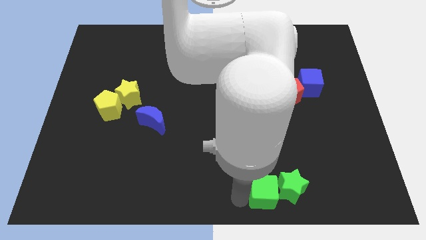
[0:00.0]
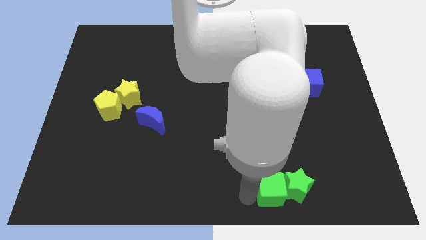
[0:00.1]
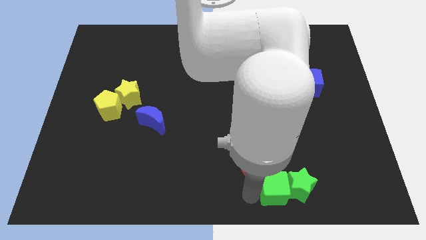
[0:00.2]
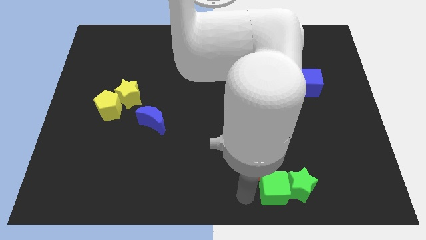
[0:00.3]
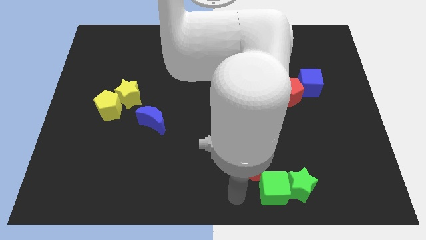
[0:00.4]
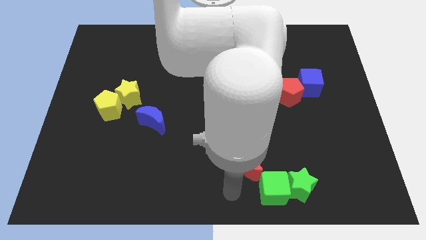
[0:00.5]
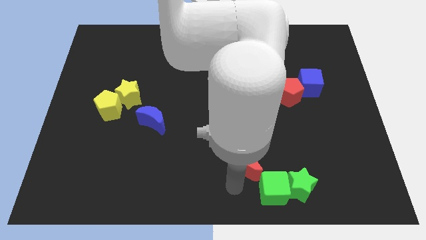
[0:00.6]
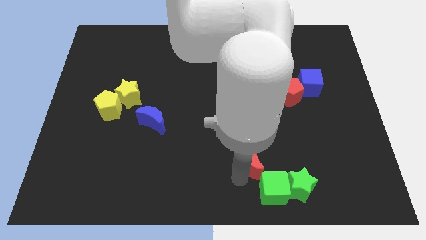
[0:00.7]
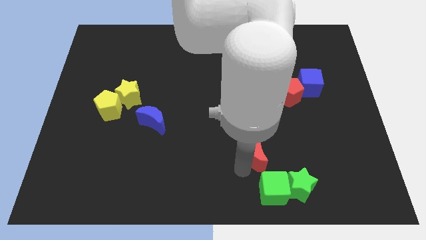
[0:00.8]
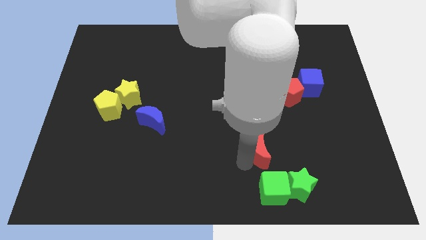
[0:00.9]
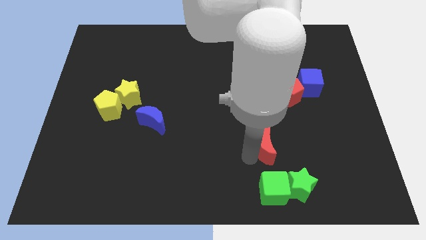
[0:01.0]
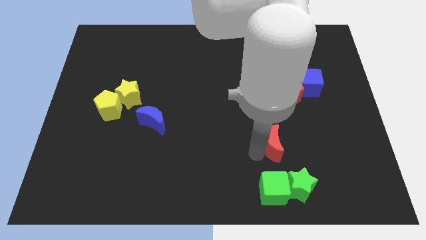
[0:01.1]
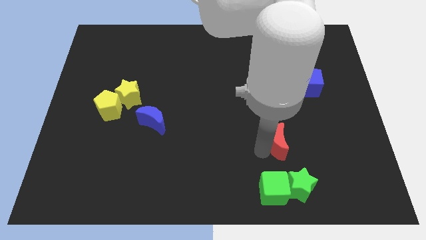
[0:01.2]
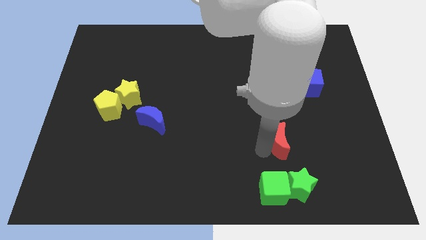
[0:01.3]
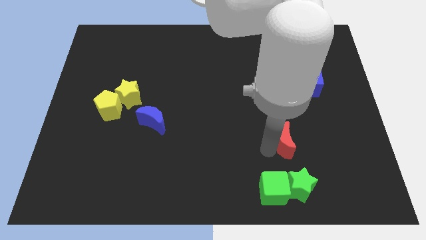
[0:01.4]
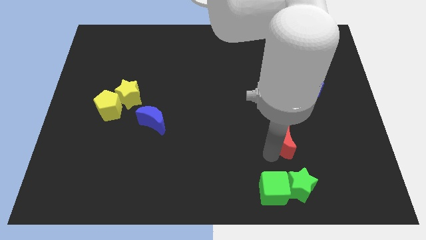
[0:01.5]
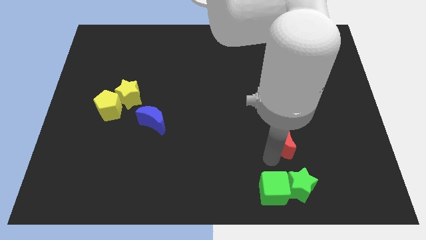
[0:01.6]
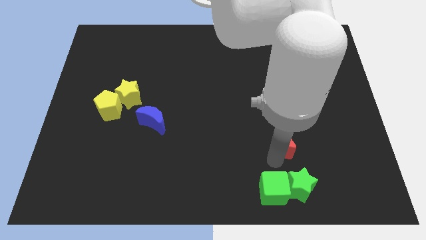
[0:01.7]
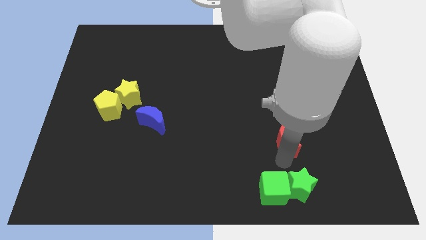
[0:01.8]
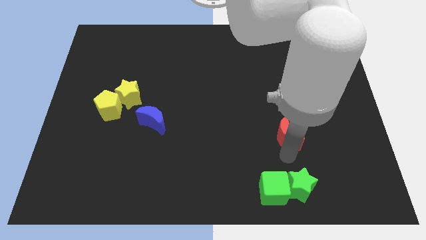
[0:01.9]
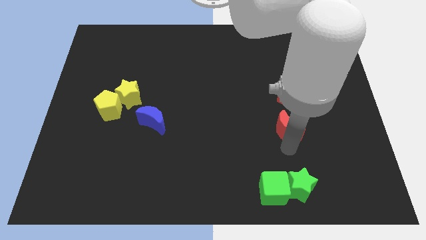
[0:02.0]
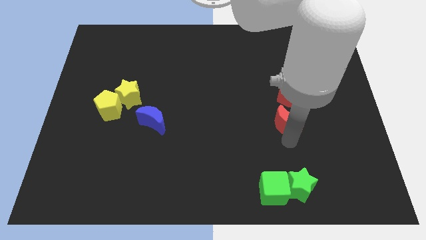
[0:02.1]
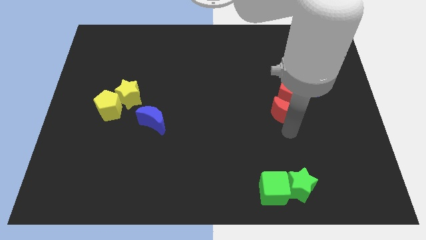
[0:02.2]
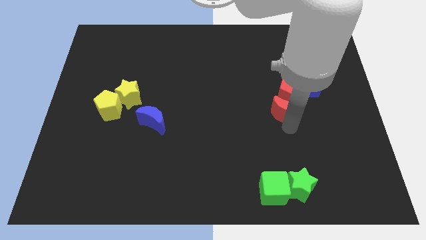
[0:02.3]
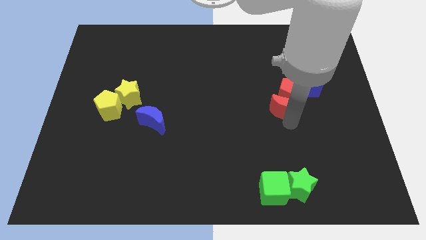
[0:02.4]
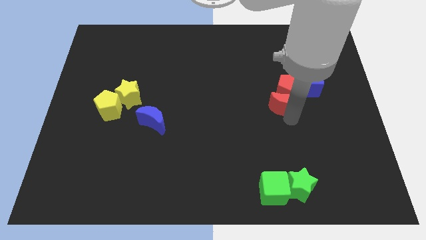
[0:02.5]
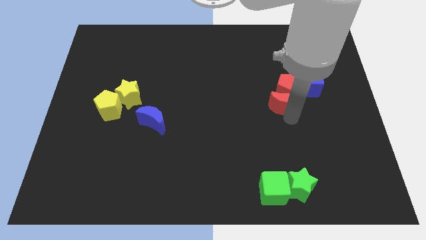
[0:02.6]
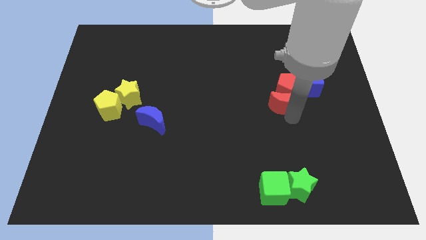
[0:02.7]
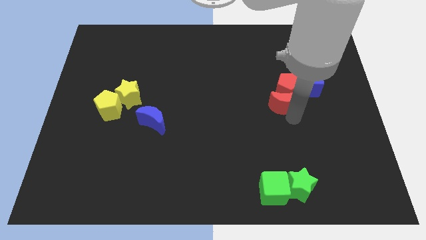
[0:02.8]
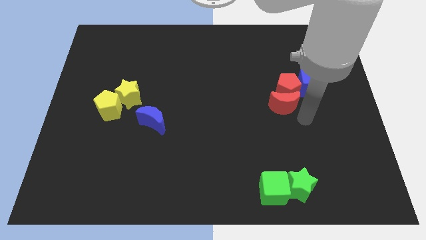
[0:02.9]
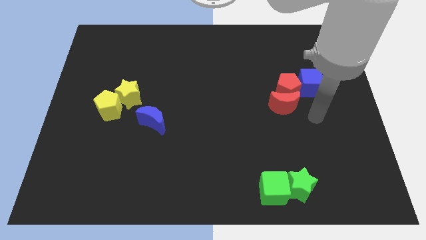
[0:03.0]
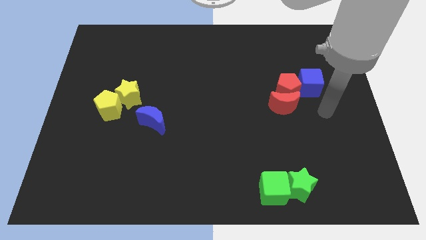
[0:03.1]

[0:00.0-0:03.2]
place the red crescent into the red pentagon

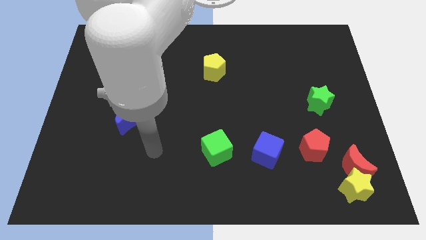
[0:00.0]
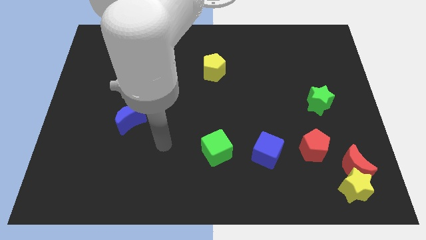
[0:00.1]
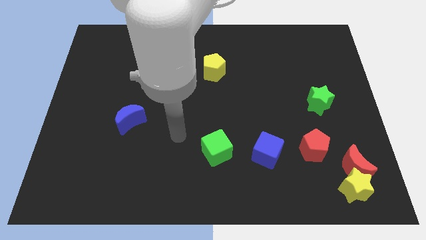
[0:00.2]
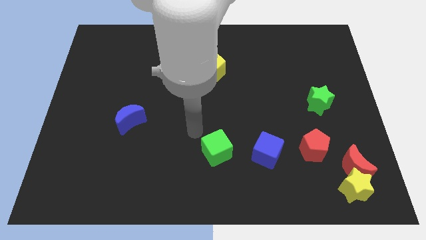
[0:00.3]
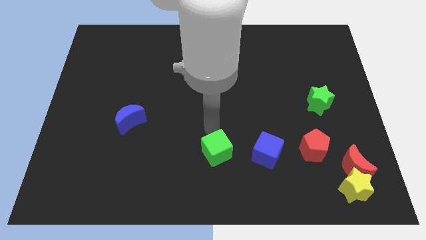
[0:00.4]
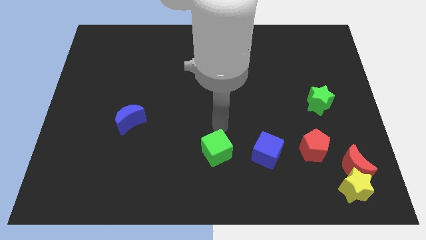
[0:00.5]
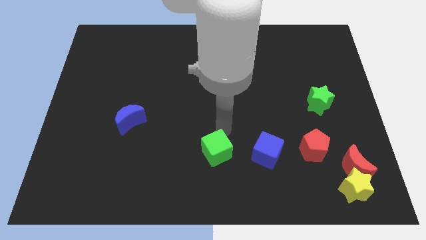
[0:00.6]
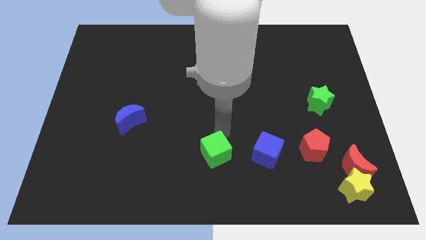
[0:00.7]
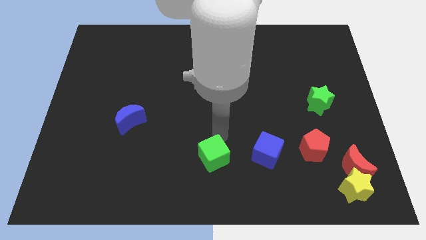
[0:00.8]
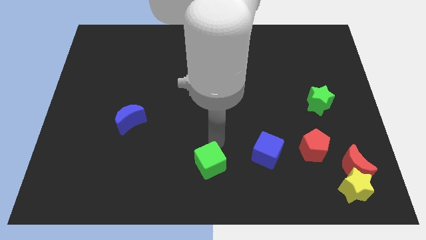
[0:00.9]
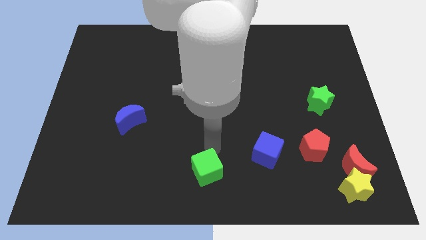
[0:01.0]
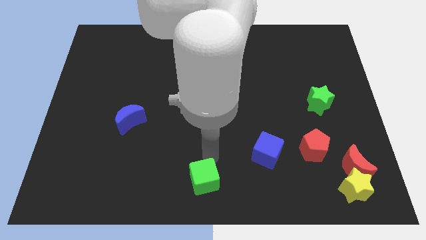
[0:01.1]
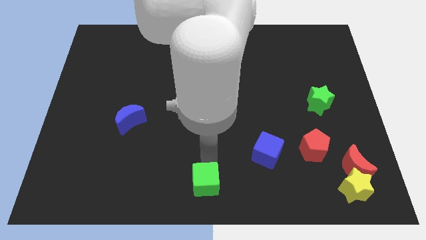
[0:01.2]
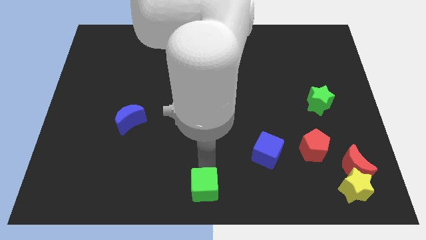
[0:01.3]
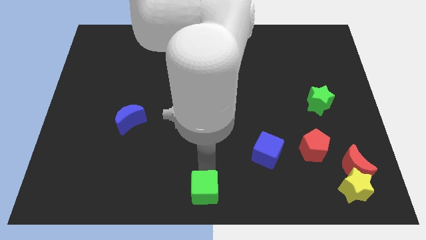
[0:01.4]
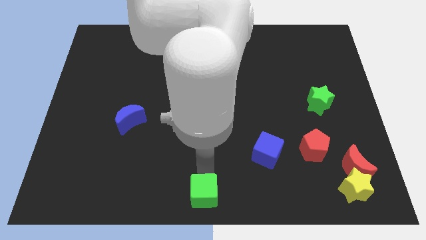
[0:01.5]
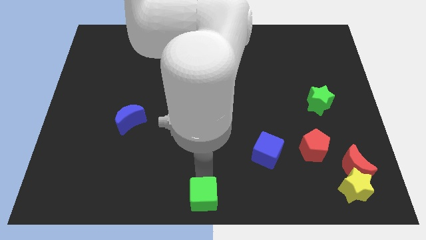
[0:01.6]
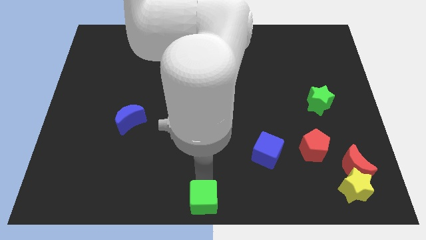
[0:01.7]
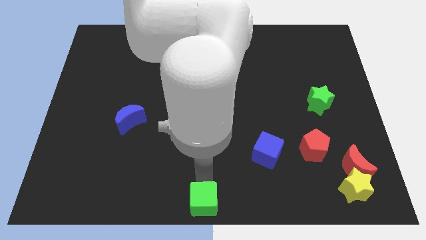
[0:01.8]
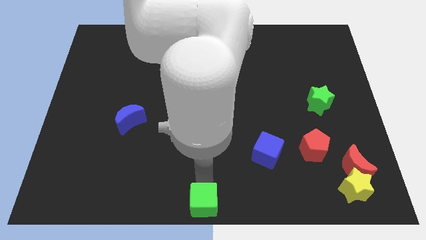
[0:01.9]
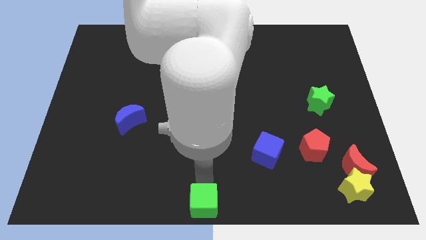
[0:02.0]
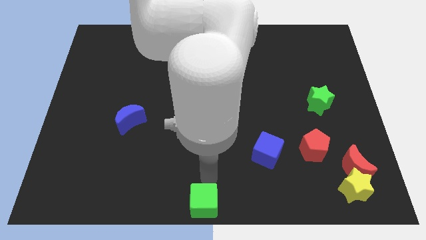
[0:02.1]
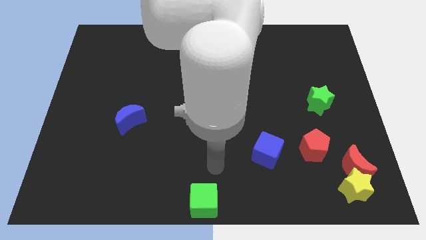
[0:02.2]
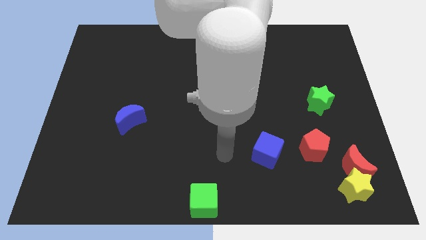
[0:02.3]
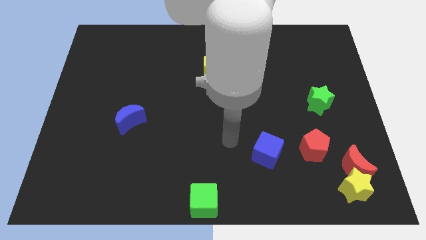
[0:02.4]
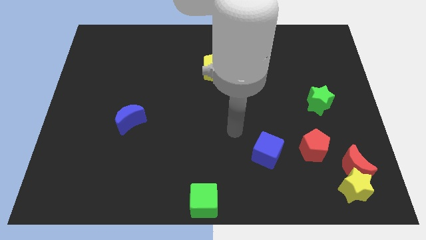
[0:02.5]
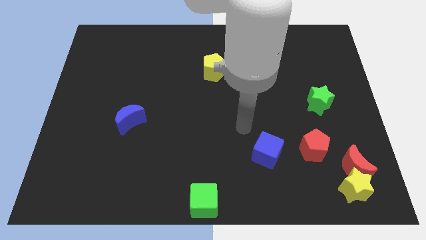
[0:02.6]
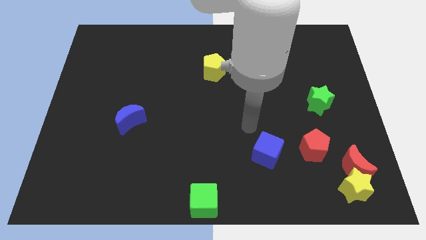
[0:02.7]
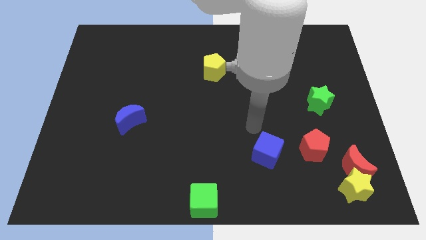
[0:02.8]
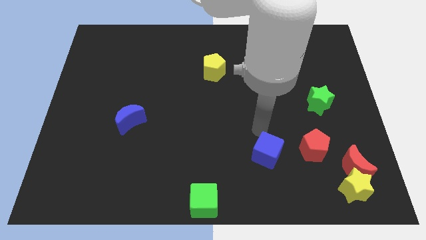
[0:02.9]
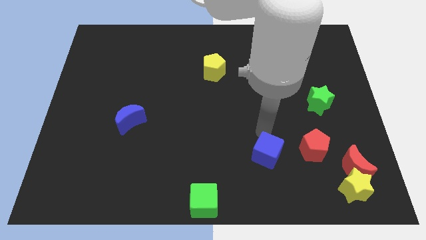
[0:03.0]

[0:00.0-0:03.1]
point your arm above blue cube

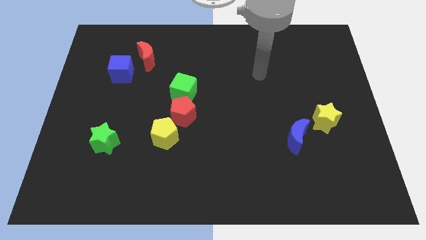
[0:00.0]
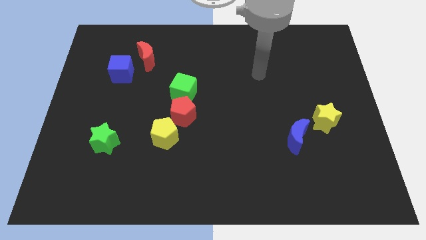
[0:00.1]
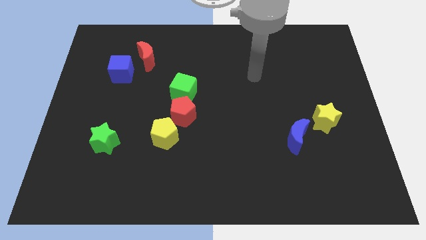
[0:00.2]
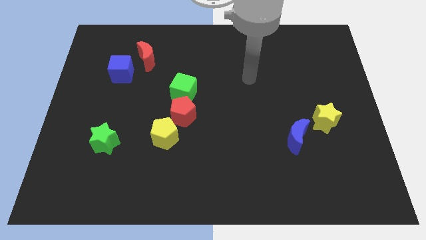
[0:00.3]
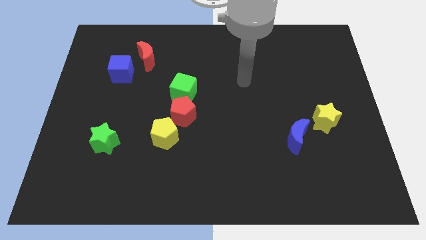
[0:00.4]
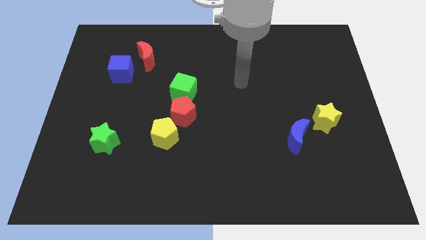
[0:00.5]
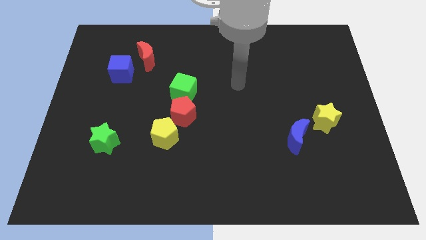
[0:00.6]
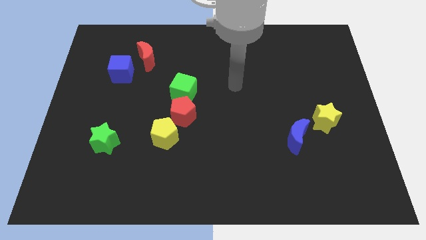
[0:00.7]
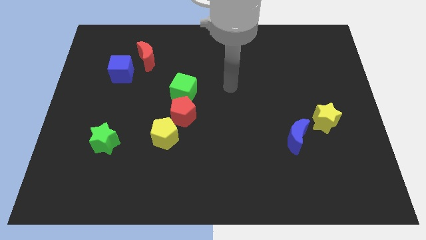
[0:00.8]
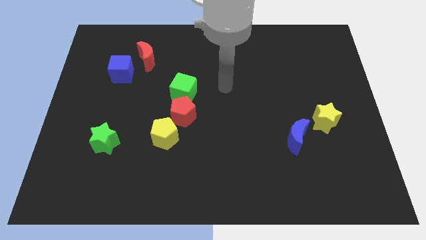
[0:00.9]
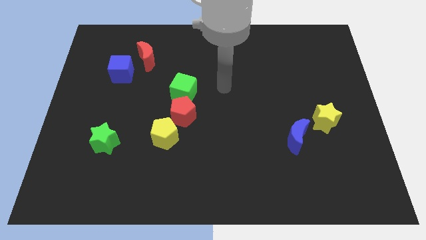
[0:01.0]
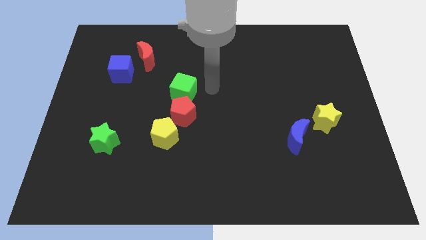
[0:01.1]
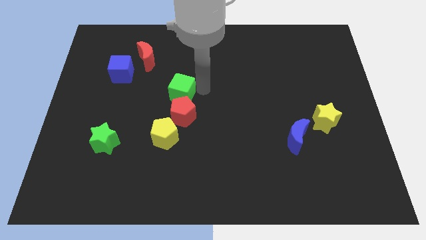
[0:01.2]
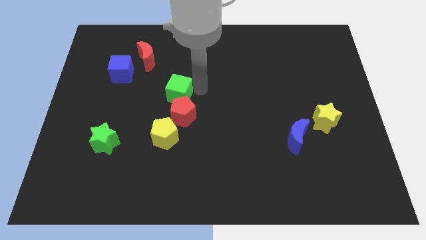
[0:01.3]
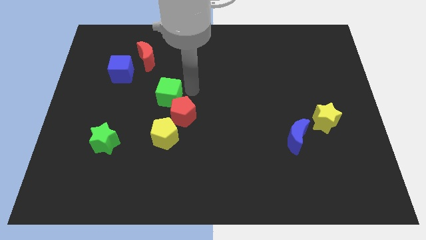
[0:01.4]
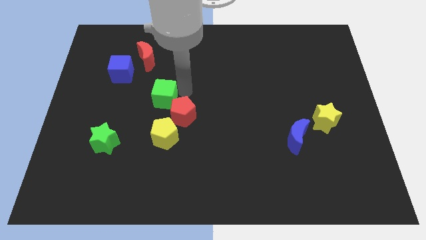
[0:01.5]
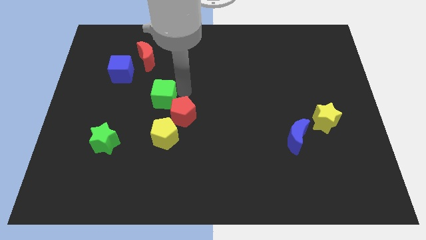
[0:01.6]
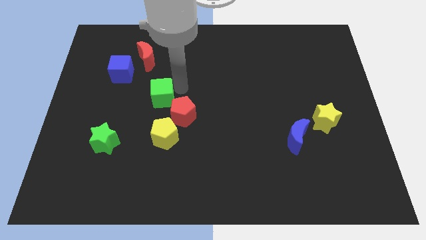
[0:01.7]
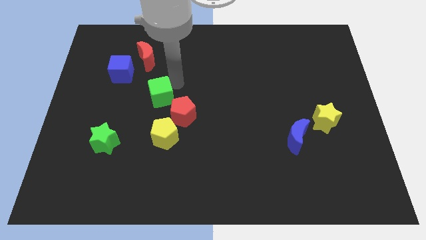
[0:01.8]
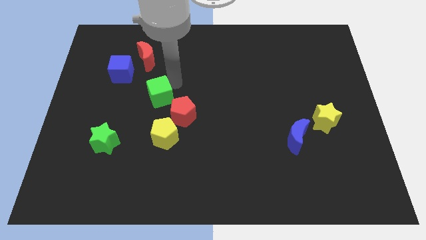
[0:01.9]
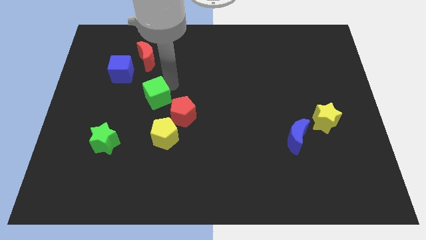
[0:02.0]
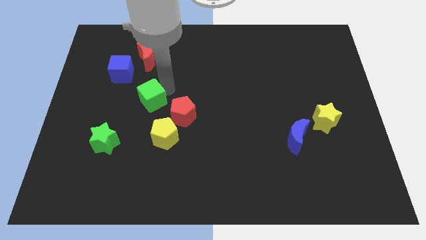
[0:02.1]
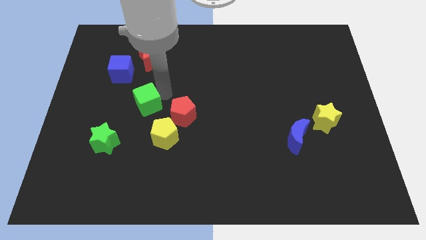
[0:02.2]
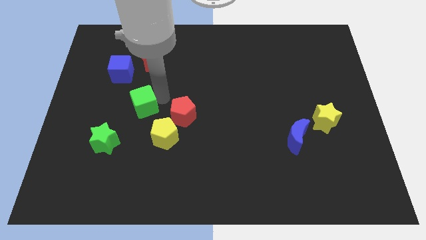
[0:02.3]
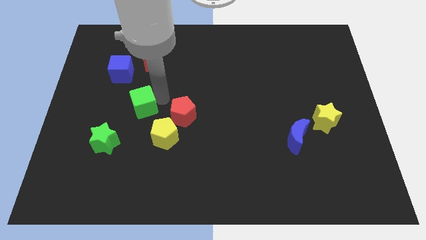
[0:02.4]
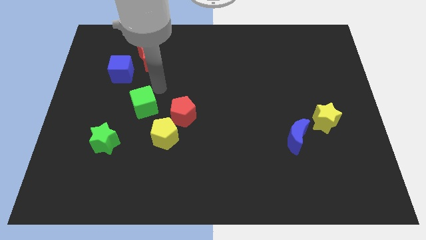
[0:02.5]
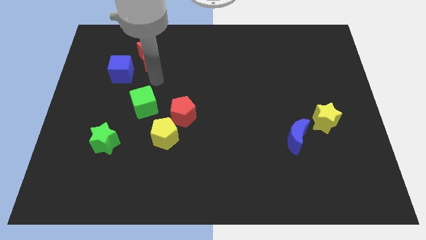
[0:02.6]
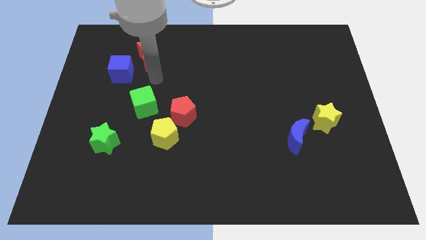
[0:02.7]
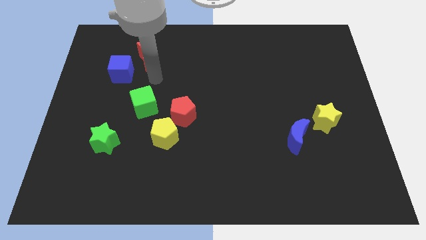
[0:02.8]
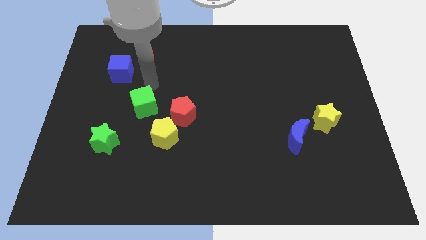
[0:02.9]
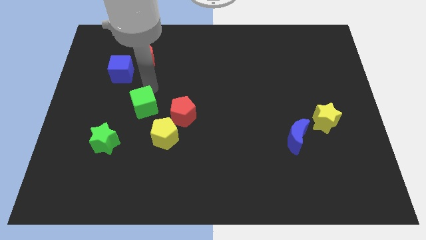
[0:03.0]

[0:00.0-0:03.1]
push the green cube above the top left side of the yellow pentagon
